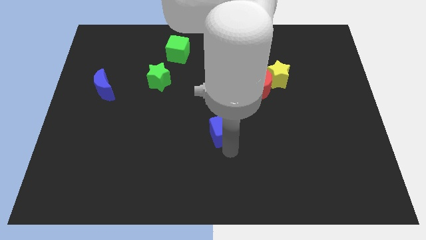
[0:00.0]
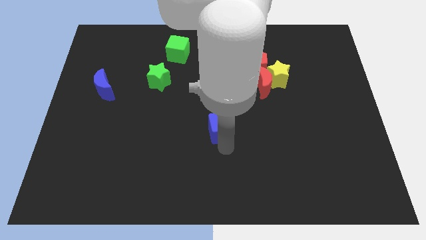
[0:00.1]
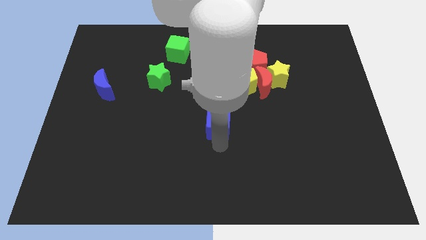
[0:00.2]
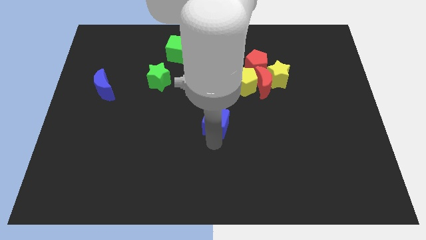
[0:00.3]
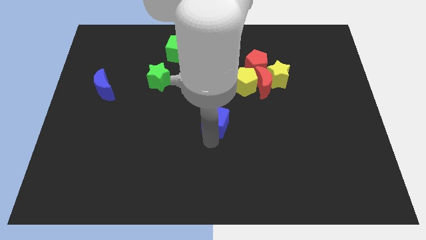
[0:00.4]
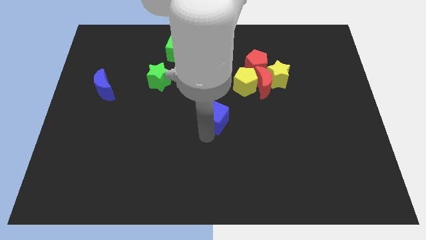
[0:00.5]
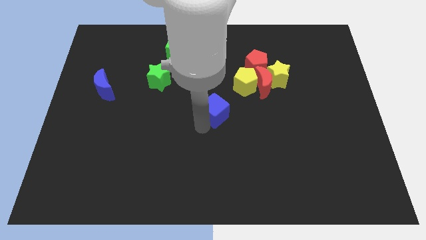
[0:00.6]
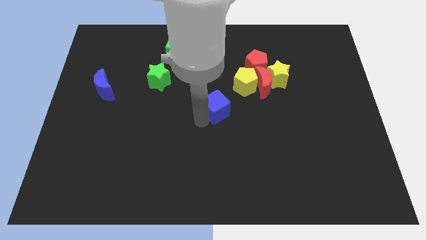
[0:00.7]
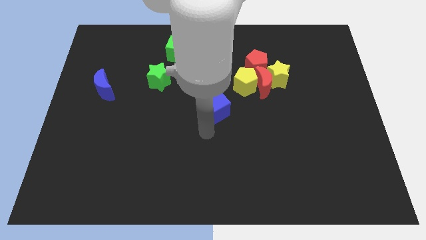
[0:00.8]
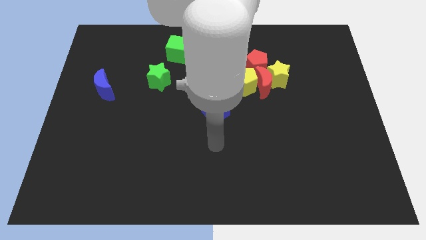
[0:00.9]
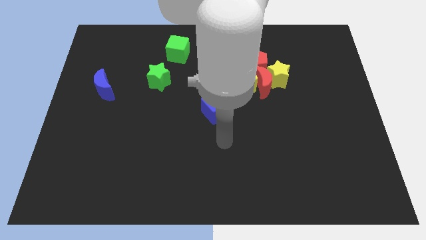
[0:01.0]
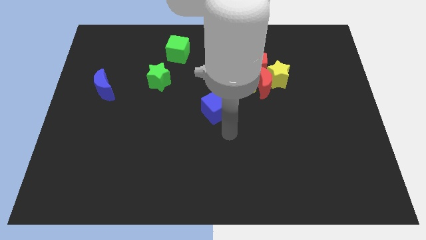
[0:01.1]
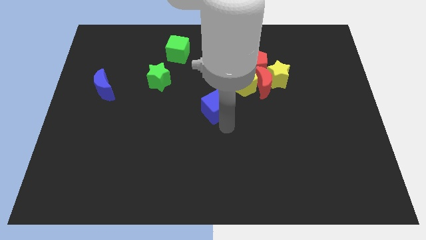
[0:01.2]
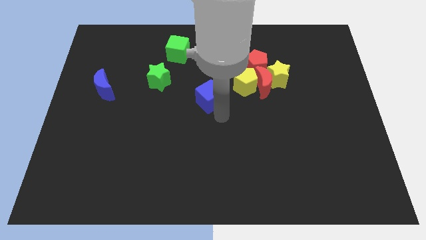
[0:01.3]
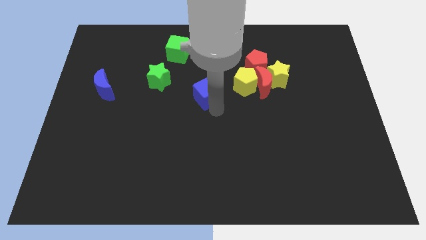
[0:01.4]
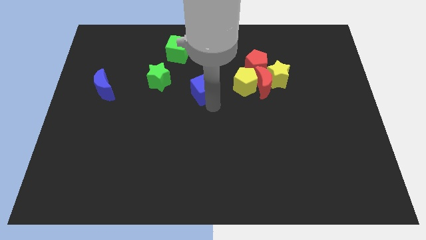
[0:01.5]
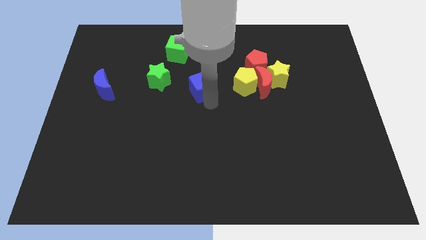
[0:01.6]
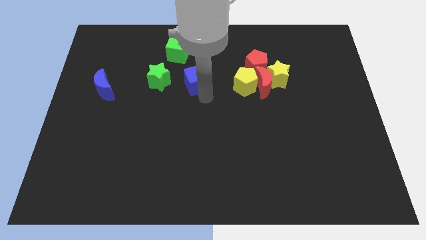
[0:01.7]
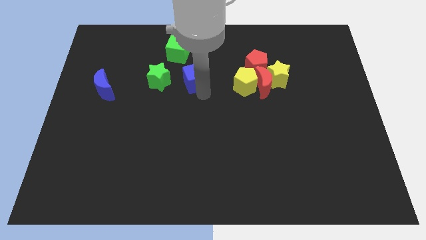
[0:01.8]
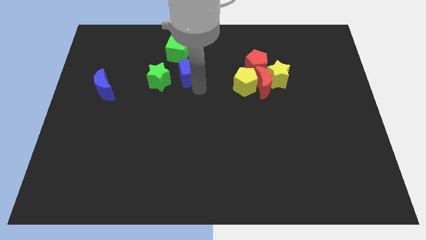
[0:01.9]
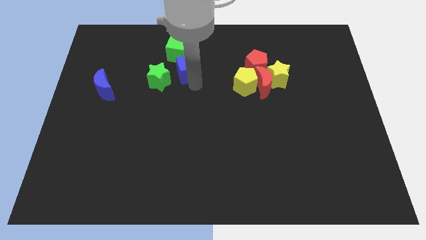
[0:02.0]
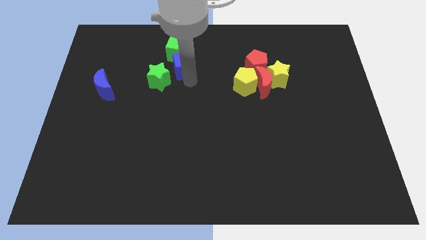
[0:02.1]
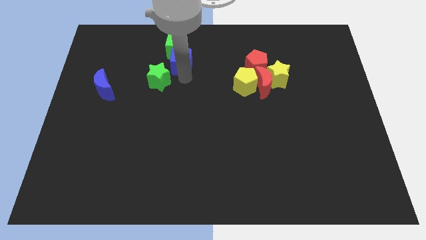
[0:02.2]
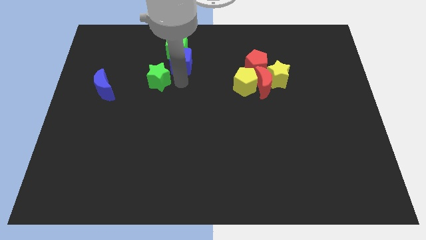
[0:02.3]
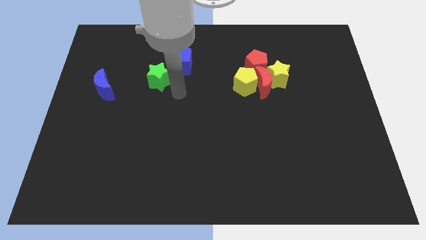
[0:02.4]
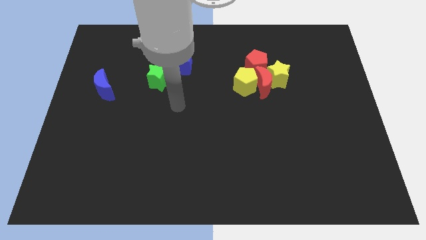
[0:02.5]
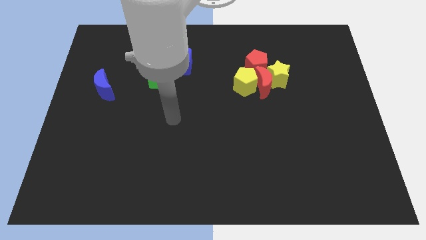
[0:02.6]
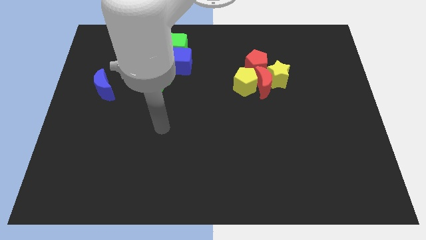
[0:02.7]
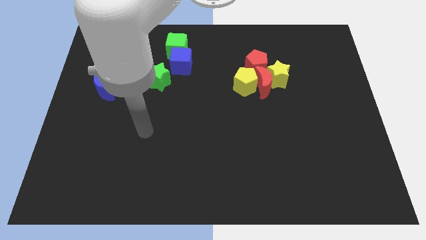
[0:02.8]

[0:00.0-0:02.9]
move the blue cube into the green cube

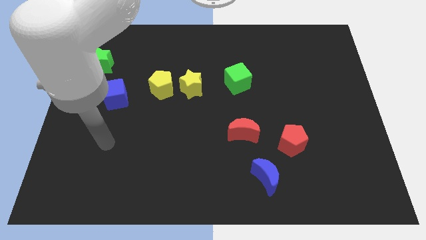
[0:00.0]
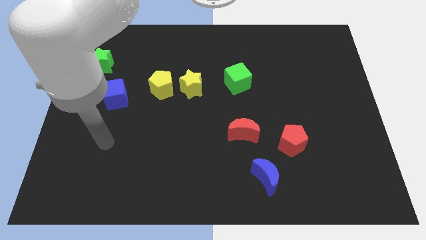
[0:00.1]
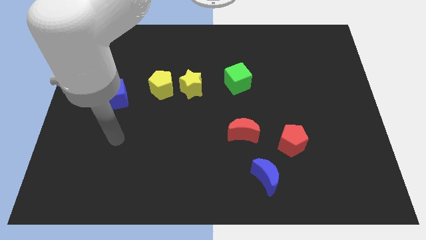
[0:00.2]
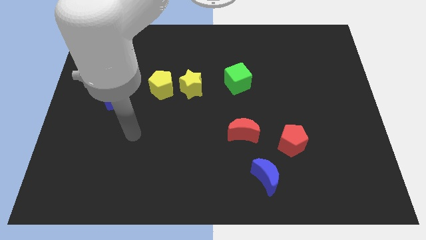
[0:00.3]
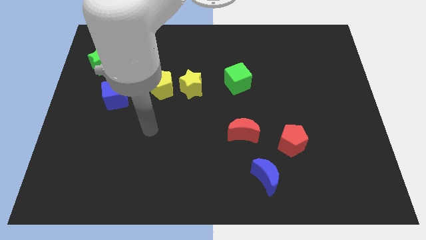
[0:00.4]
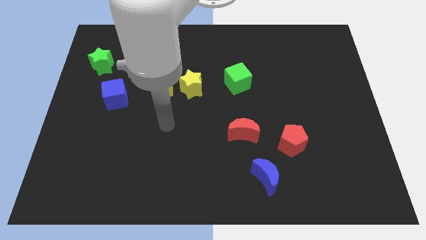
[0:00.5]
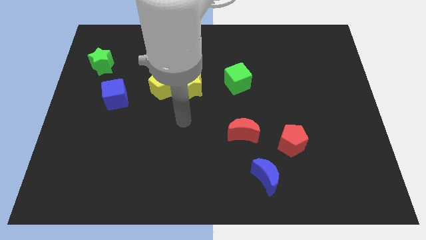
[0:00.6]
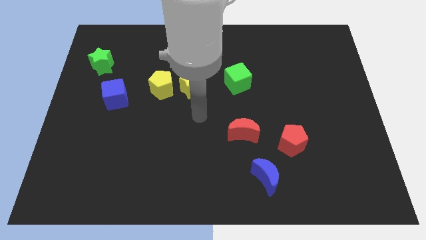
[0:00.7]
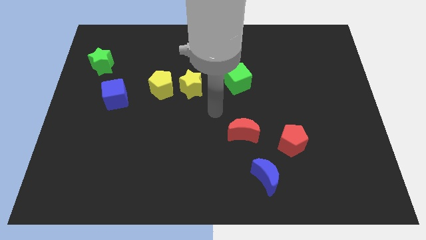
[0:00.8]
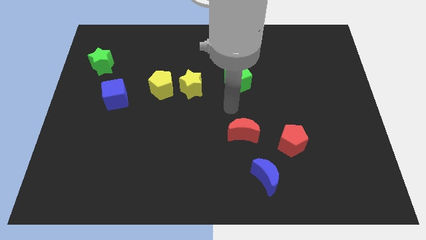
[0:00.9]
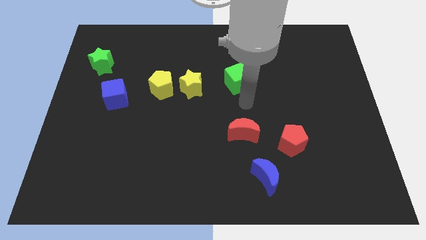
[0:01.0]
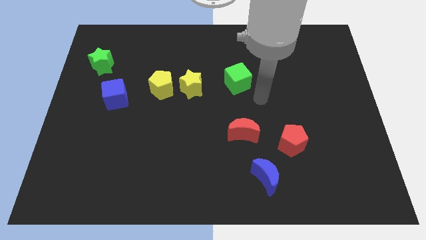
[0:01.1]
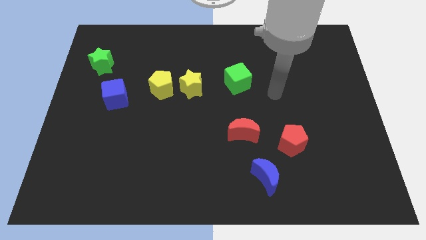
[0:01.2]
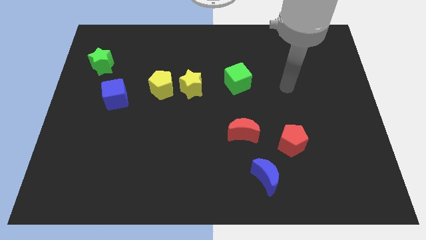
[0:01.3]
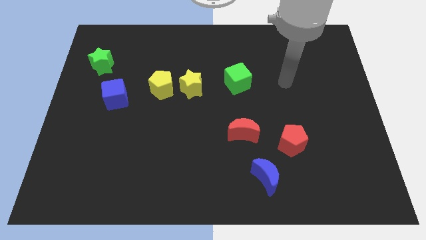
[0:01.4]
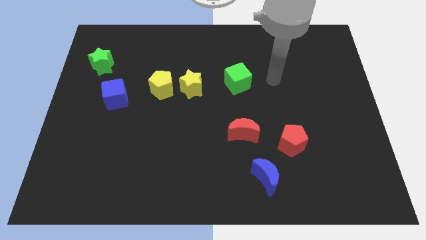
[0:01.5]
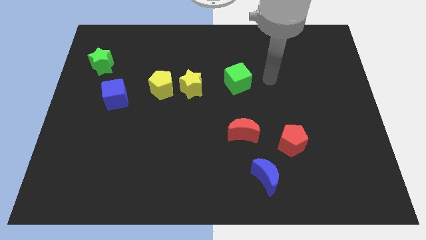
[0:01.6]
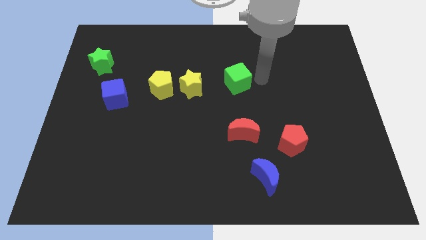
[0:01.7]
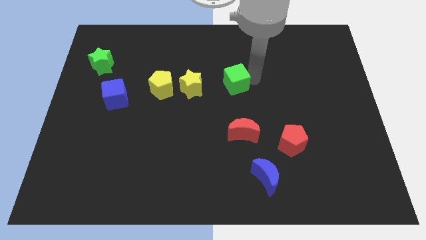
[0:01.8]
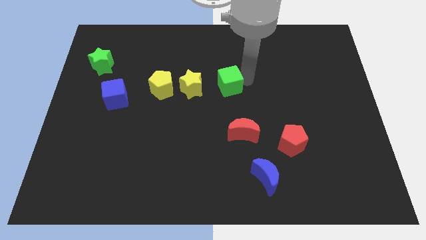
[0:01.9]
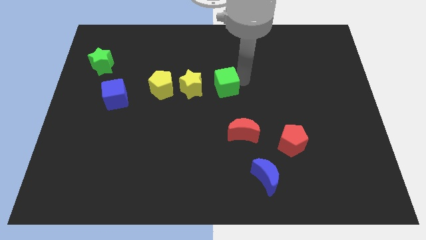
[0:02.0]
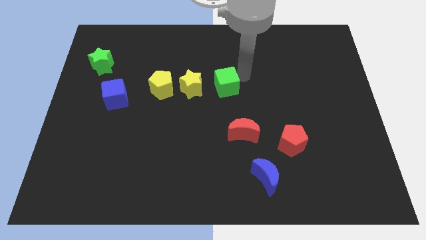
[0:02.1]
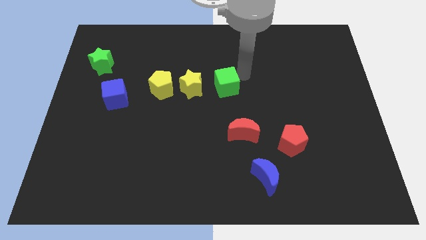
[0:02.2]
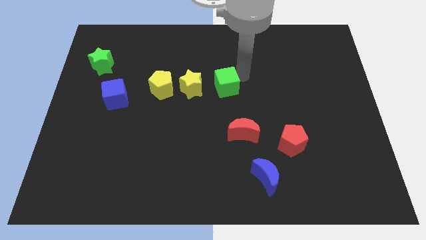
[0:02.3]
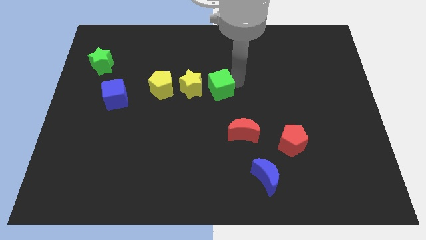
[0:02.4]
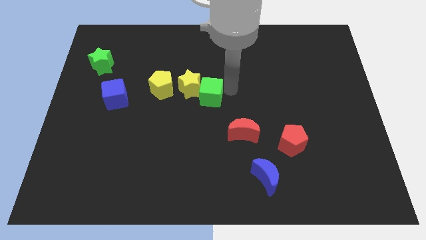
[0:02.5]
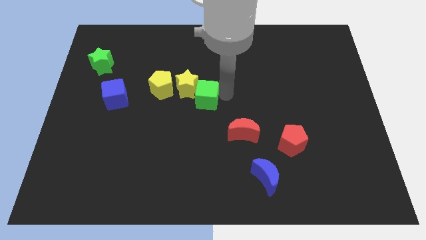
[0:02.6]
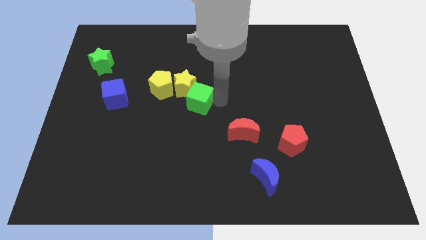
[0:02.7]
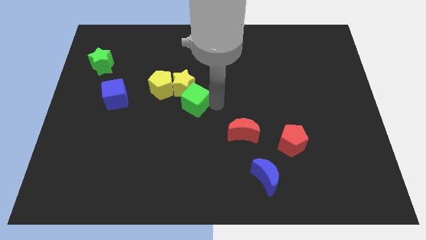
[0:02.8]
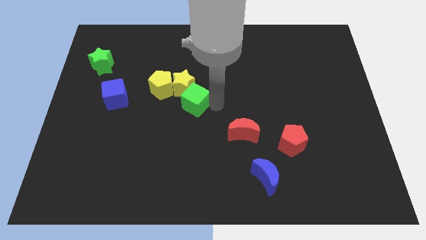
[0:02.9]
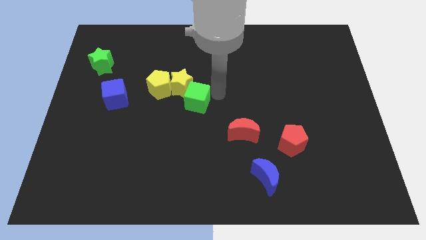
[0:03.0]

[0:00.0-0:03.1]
push the green cube into the yellow star

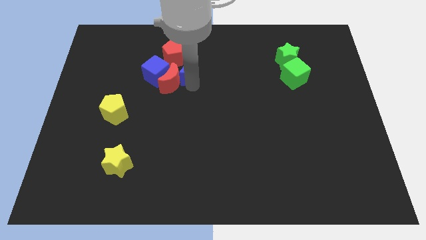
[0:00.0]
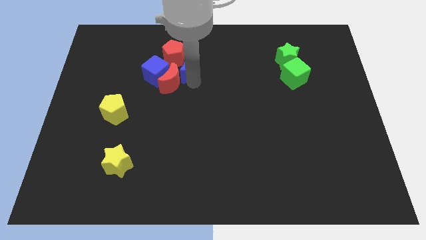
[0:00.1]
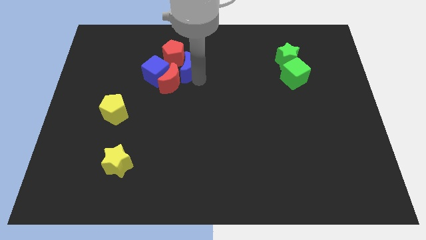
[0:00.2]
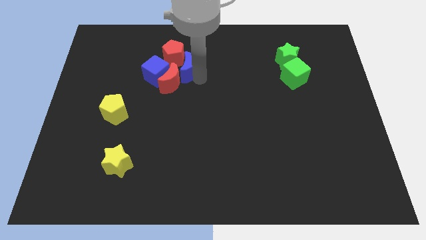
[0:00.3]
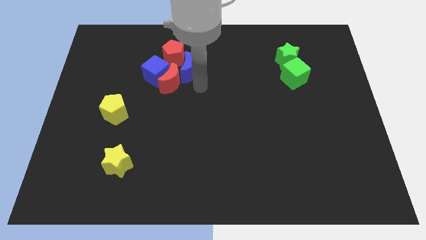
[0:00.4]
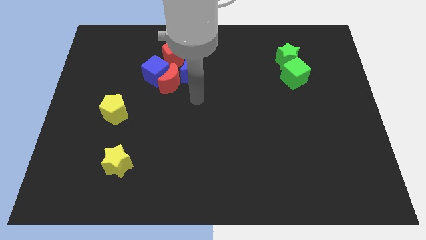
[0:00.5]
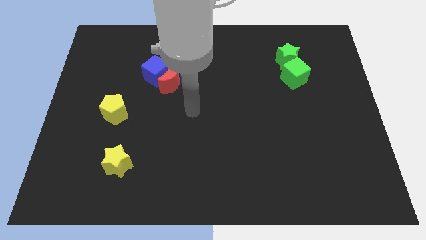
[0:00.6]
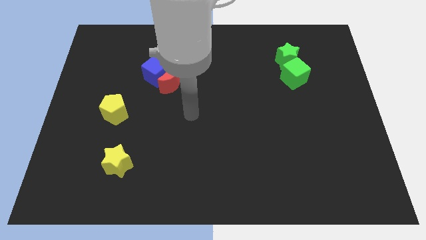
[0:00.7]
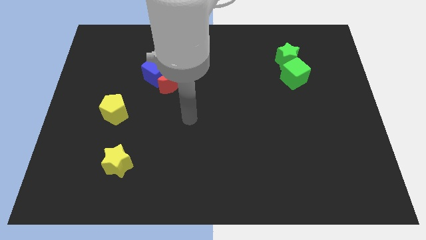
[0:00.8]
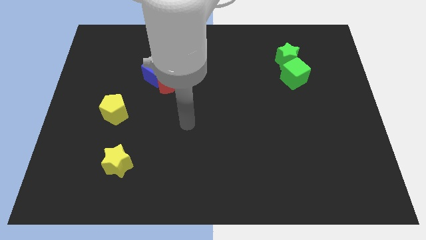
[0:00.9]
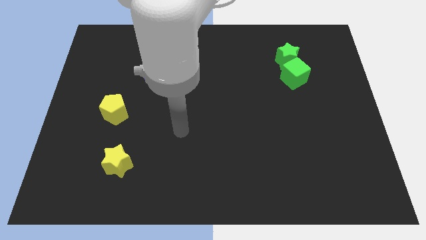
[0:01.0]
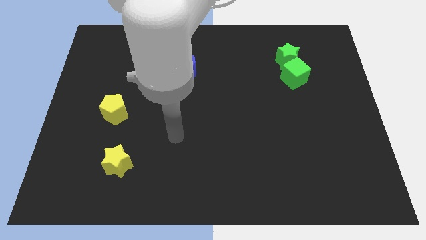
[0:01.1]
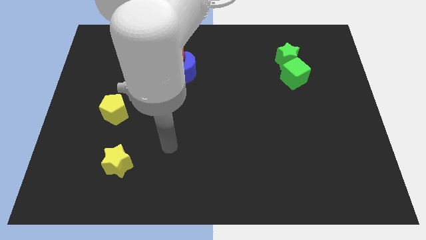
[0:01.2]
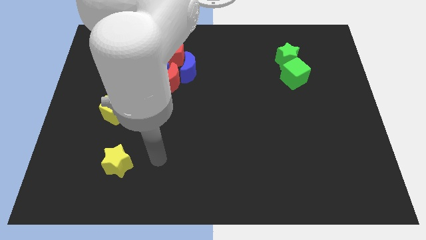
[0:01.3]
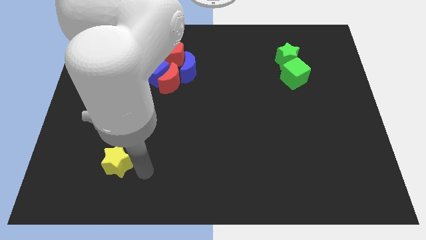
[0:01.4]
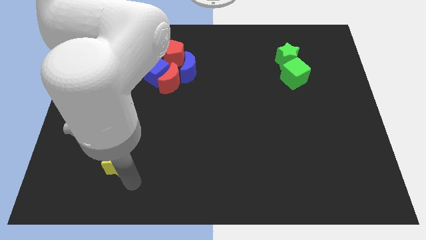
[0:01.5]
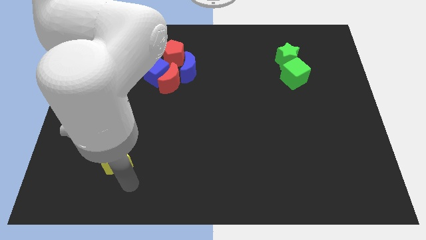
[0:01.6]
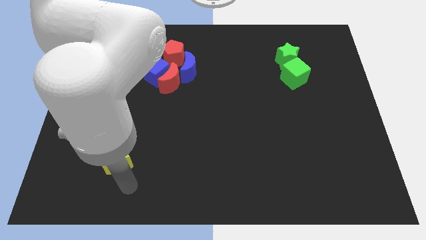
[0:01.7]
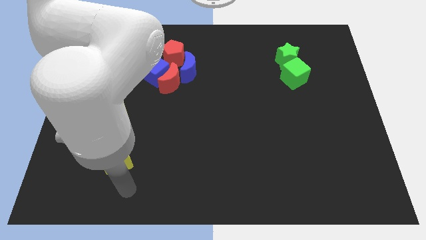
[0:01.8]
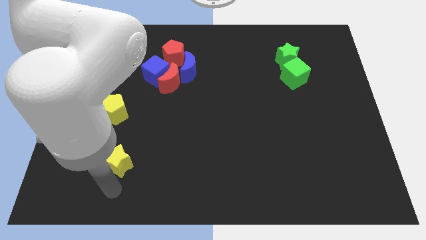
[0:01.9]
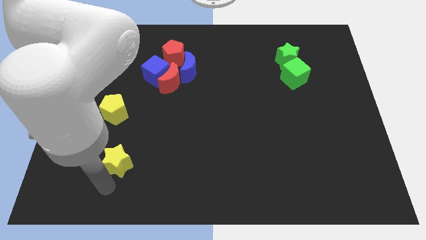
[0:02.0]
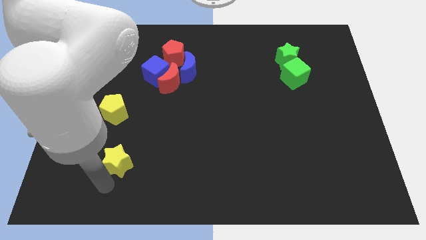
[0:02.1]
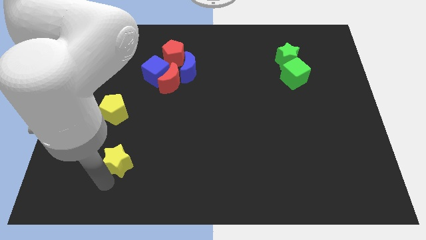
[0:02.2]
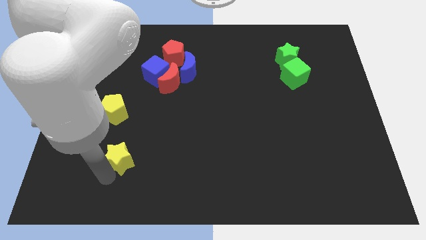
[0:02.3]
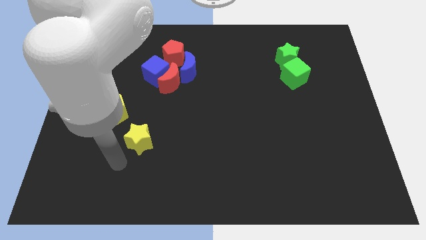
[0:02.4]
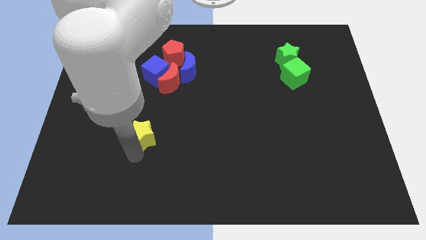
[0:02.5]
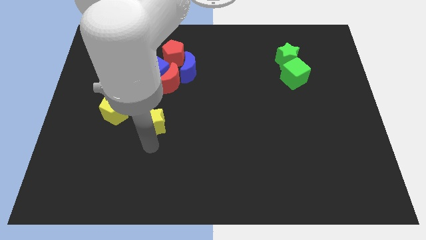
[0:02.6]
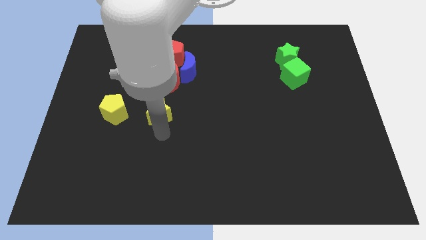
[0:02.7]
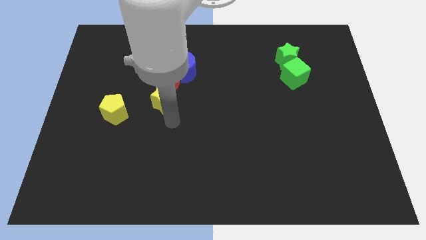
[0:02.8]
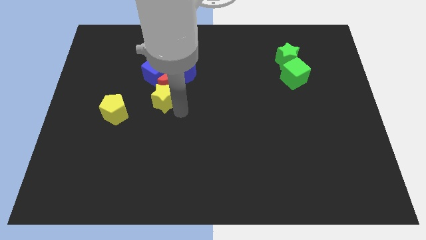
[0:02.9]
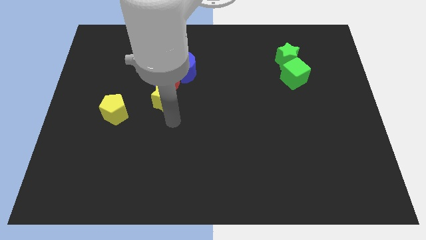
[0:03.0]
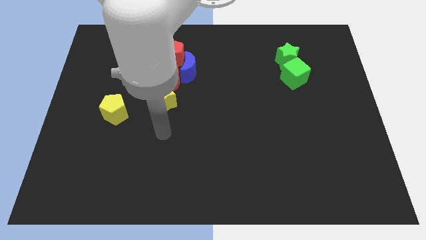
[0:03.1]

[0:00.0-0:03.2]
drag yellow star towards group of blocks
